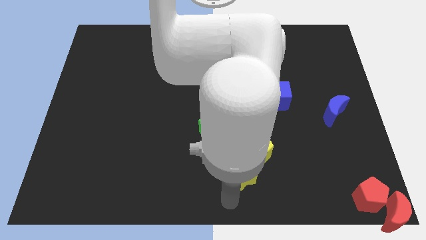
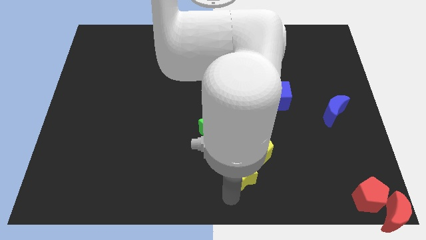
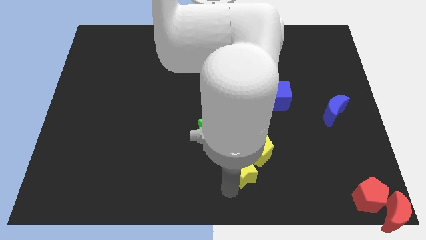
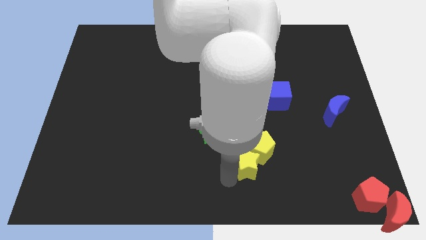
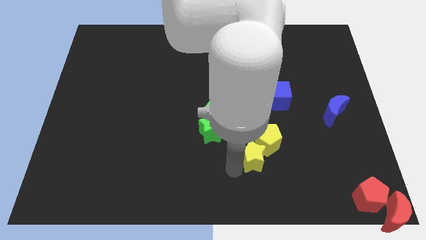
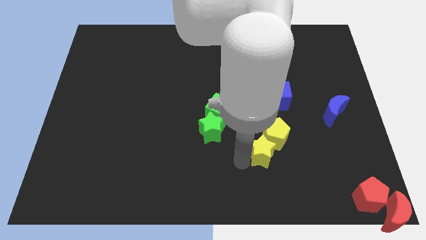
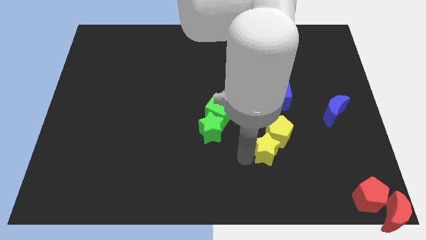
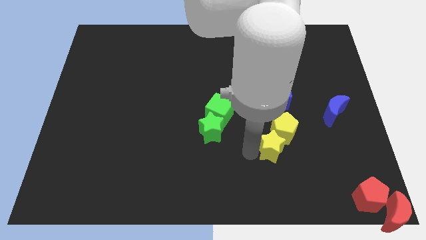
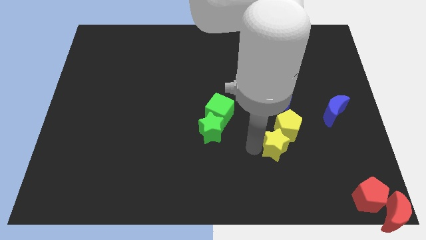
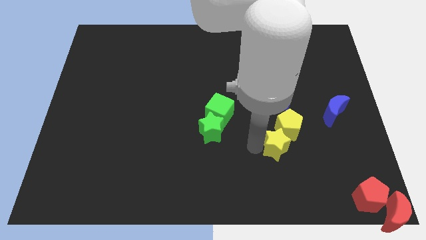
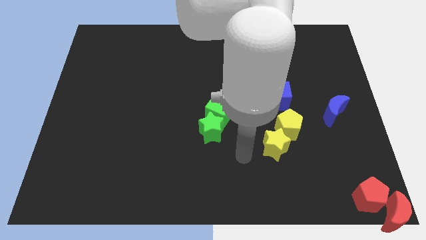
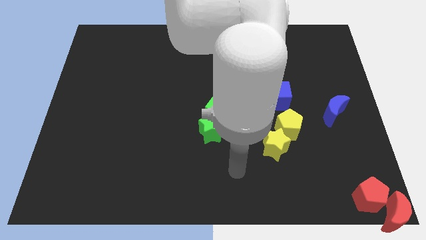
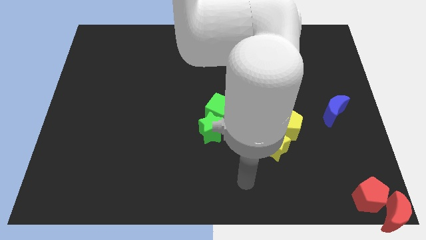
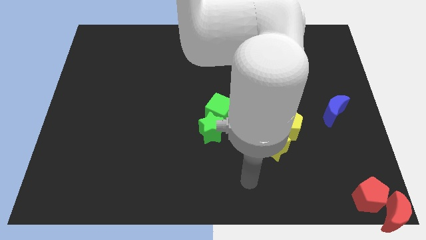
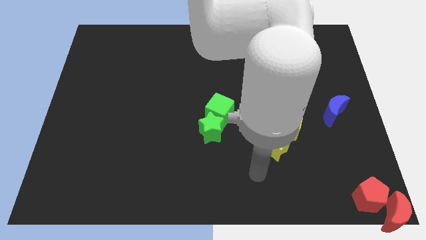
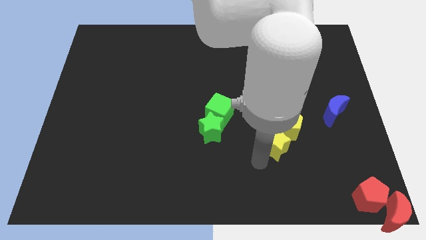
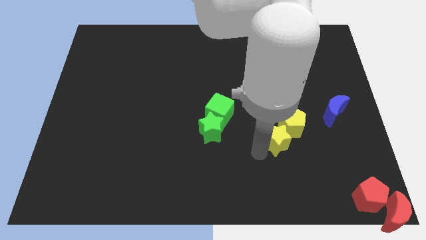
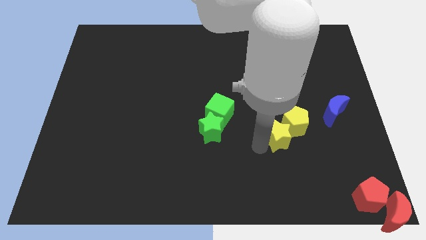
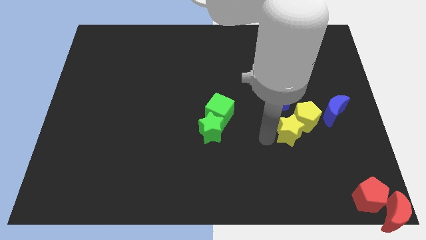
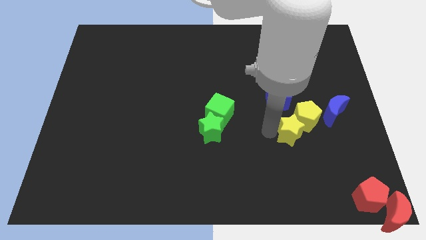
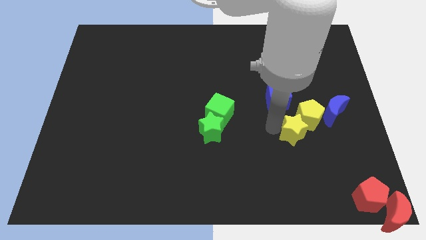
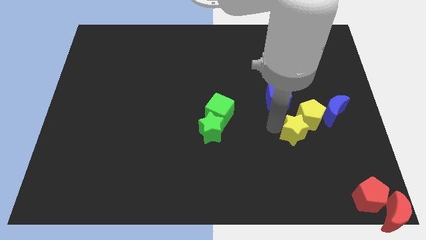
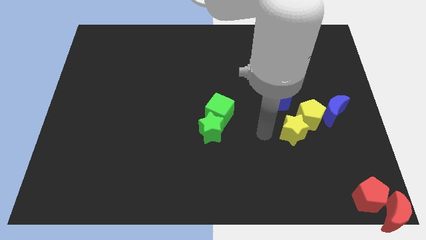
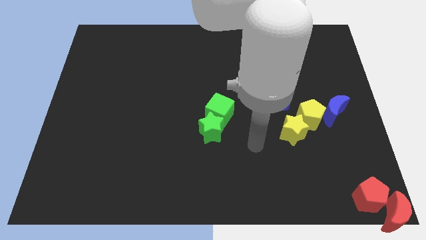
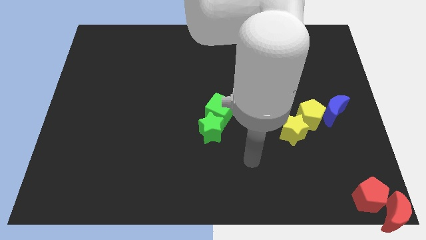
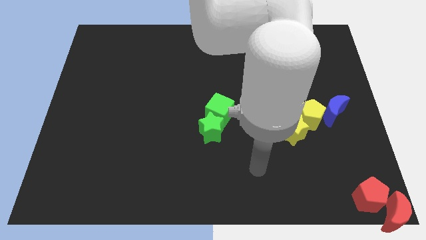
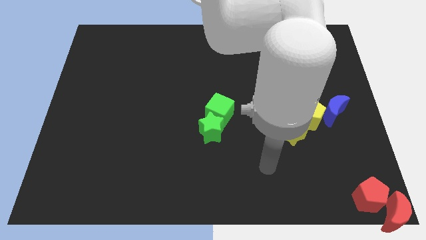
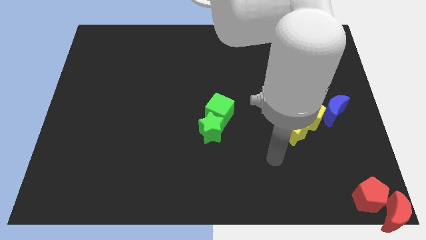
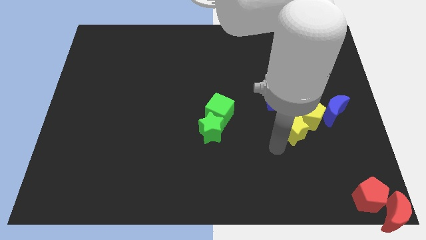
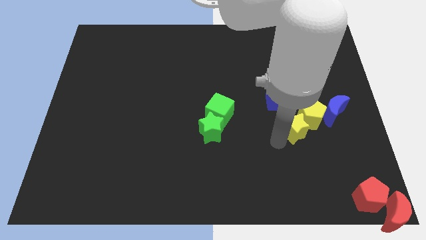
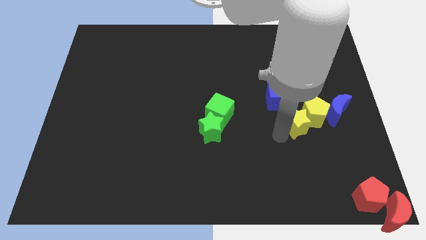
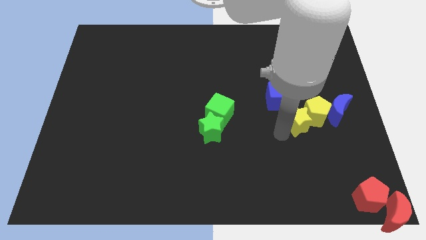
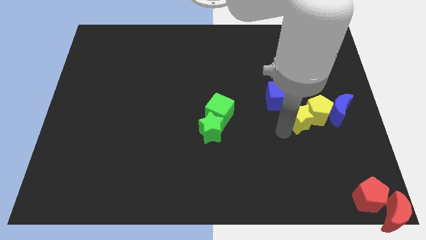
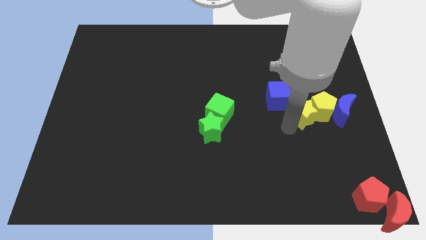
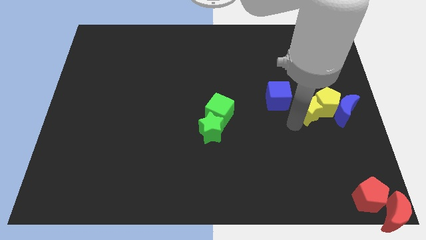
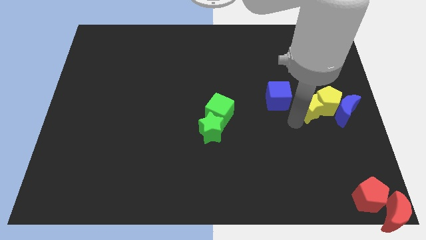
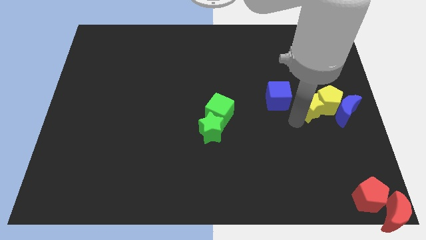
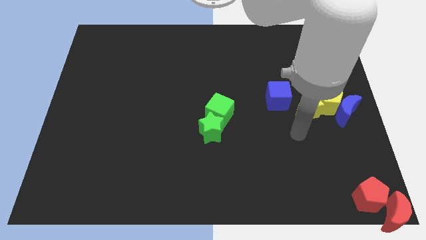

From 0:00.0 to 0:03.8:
push yellow blocks in between blue blocks

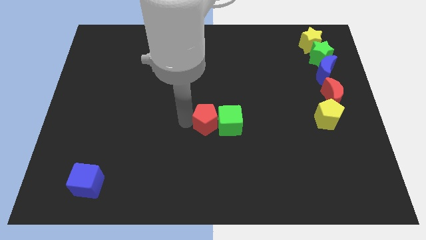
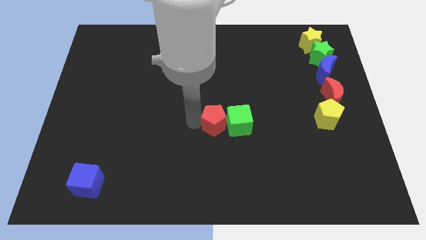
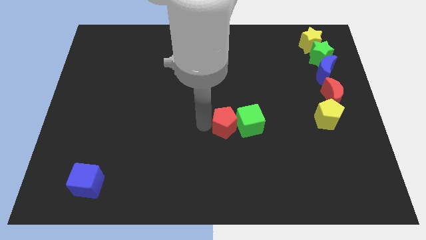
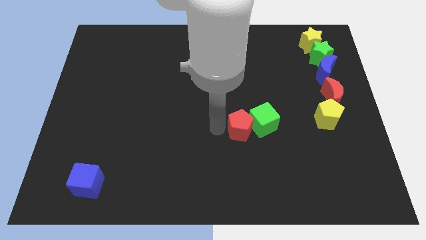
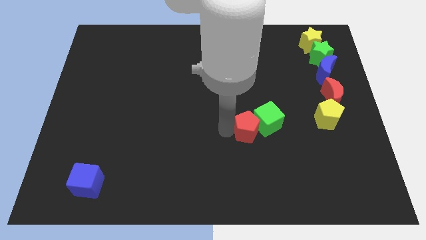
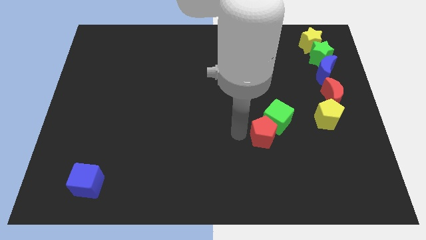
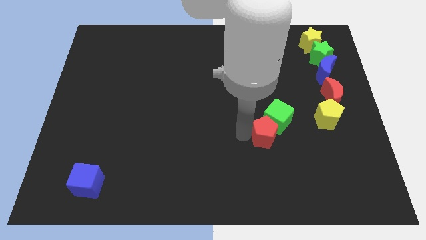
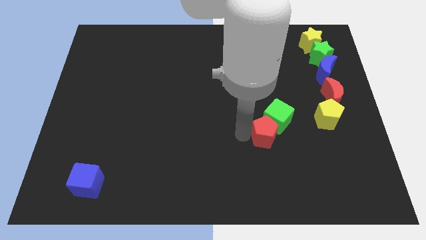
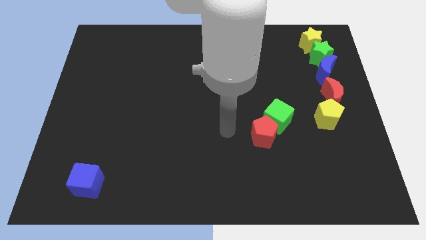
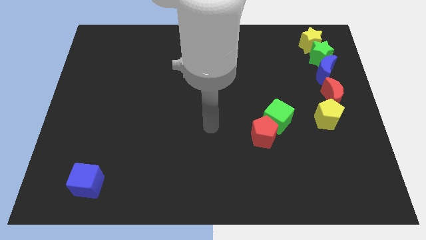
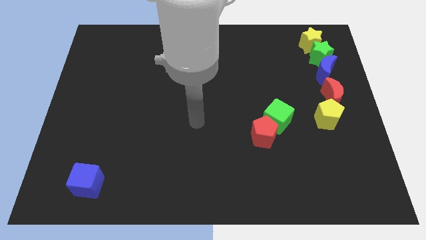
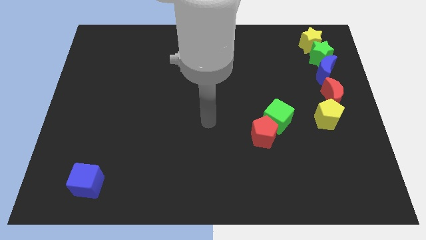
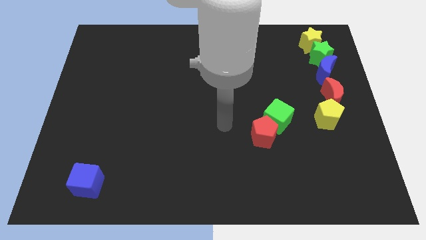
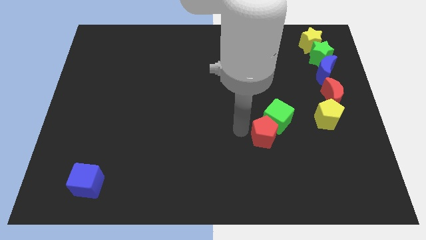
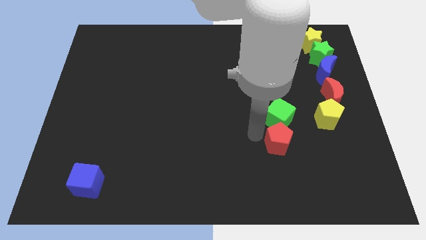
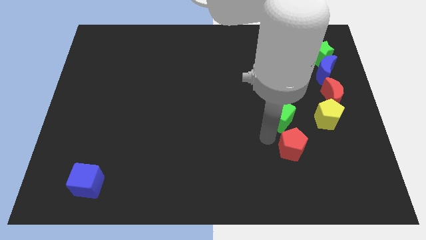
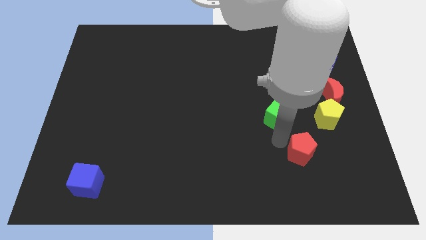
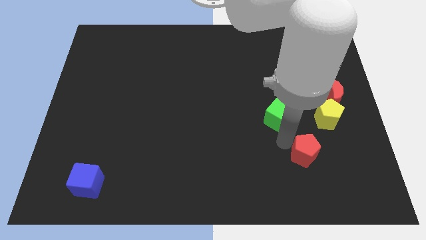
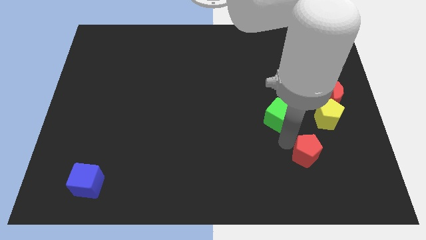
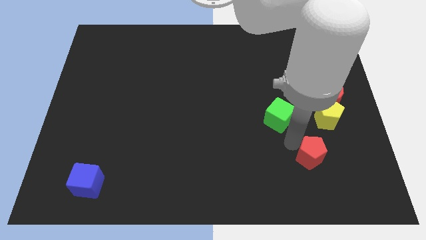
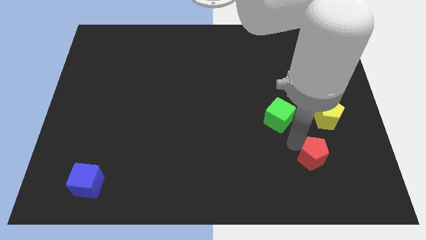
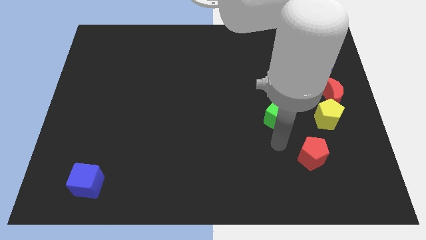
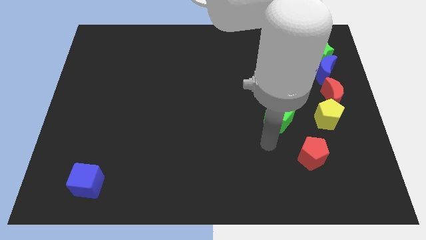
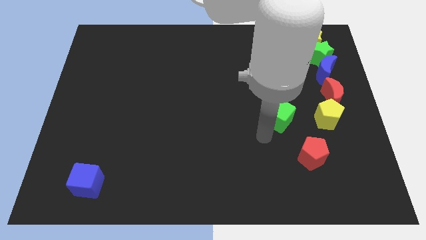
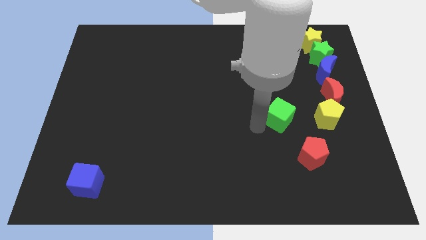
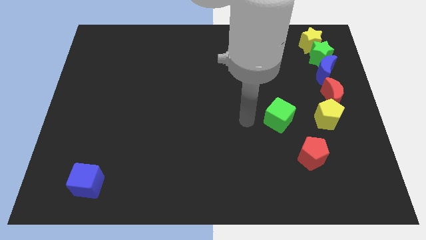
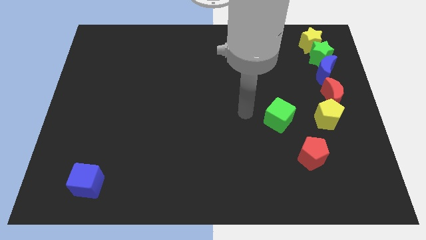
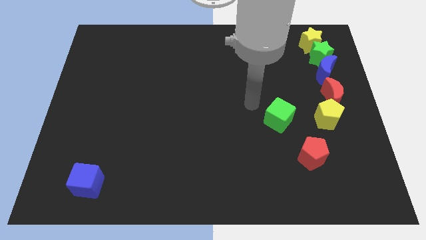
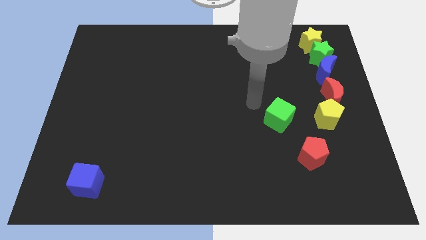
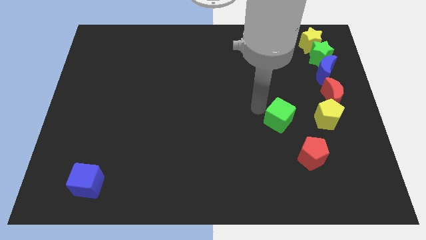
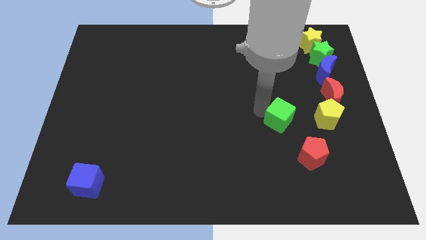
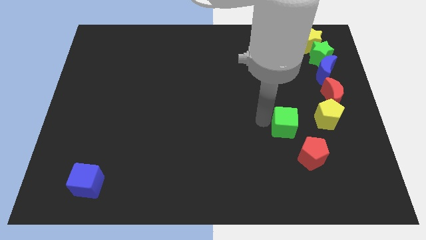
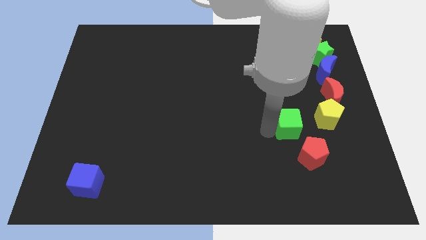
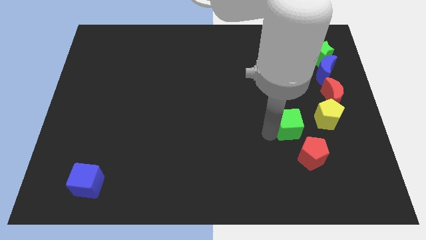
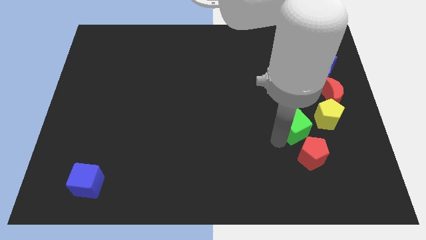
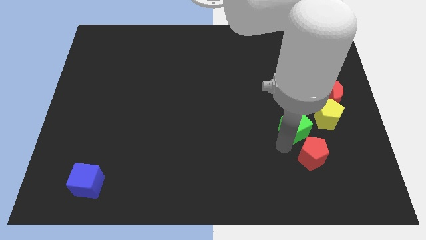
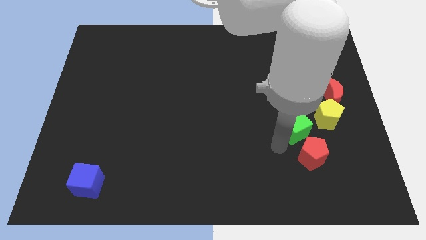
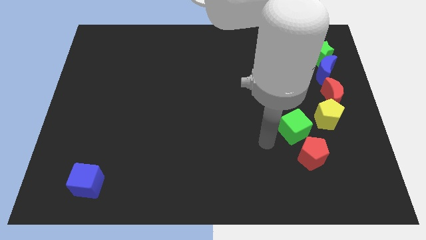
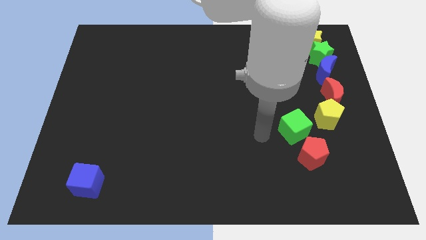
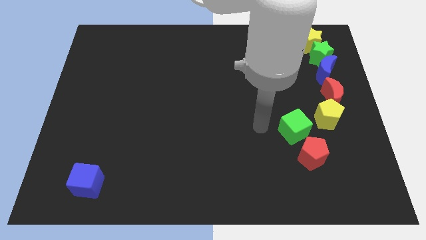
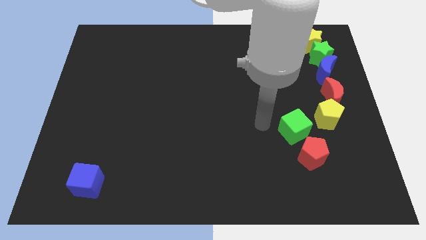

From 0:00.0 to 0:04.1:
push the red pentagon slightly towards the right

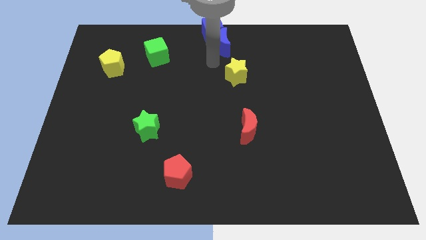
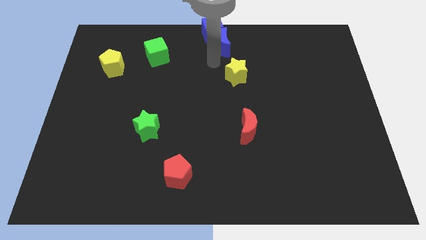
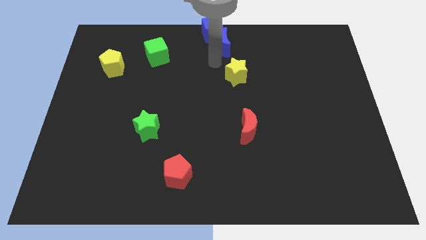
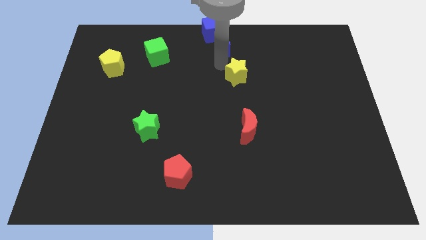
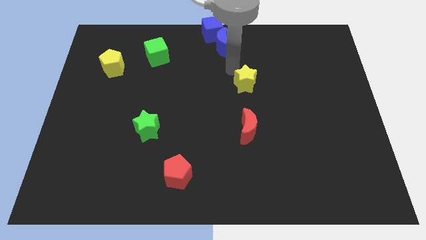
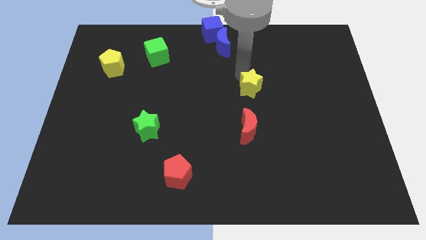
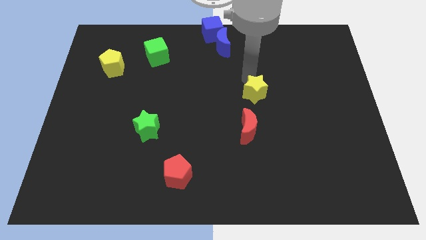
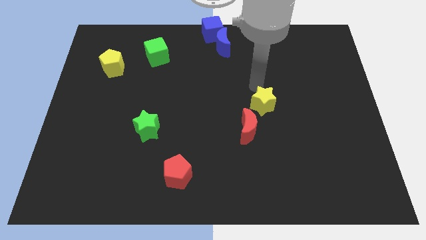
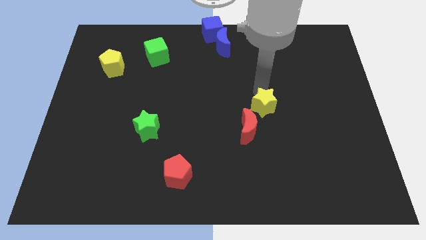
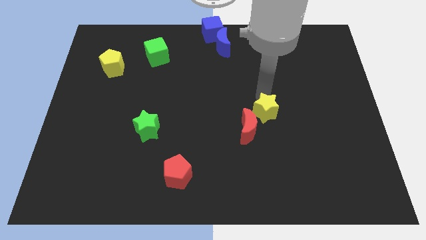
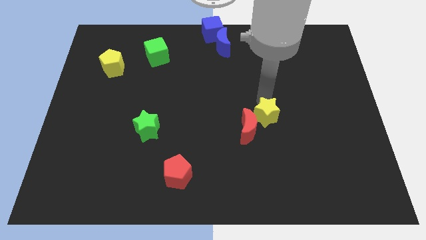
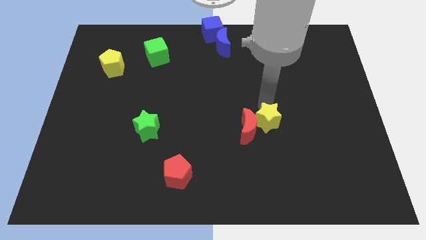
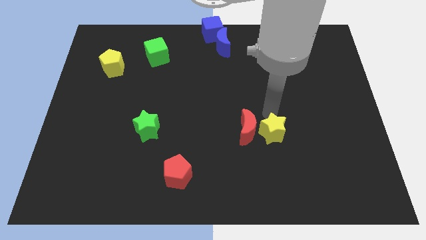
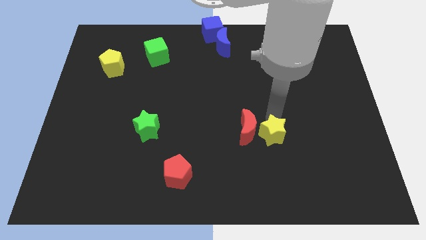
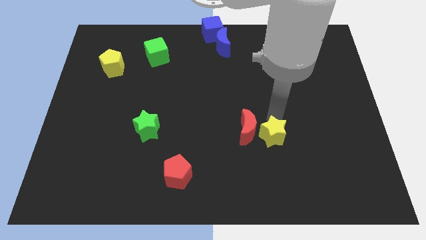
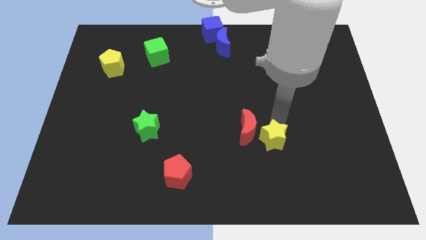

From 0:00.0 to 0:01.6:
place the yellow star right to the red moon
